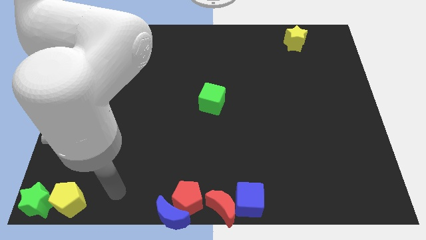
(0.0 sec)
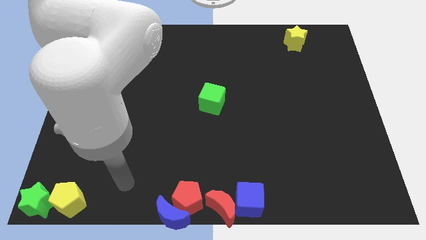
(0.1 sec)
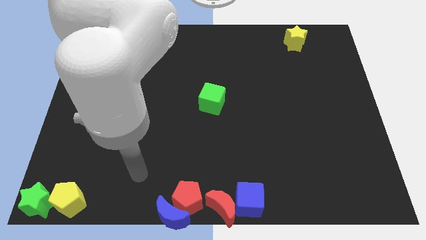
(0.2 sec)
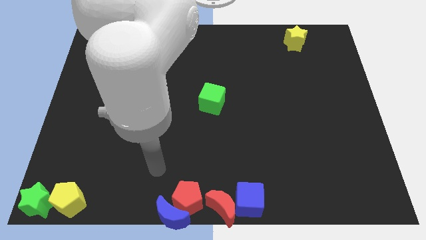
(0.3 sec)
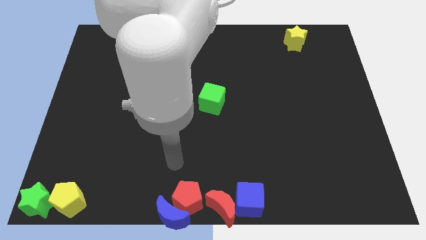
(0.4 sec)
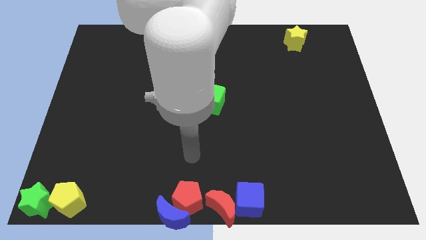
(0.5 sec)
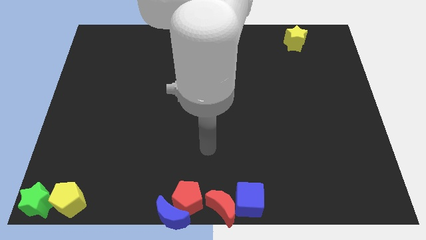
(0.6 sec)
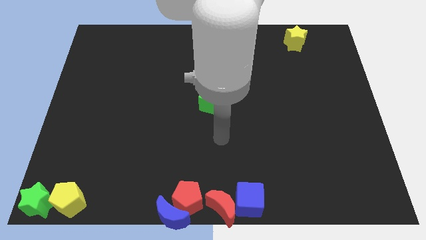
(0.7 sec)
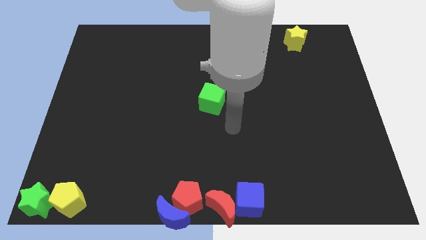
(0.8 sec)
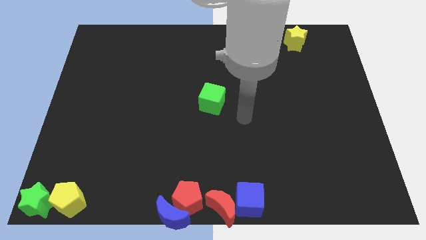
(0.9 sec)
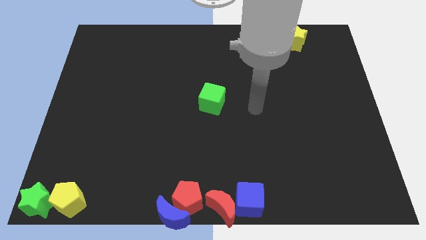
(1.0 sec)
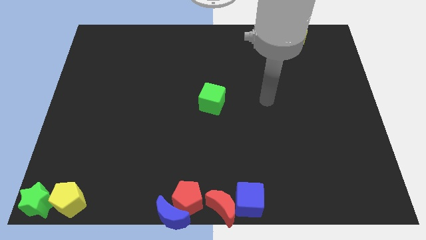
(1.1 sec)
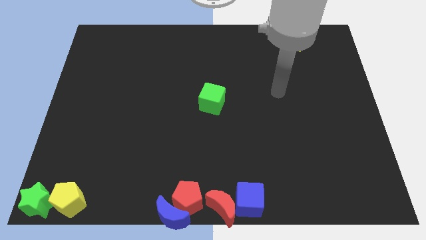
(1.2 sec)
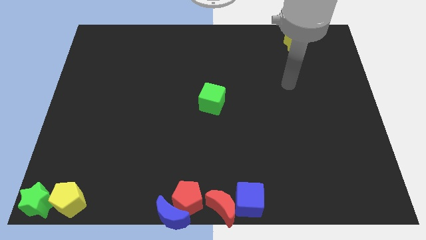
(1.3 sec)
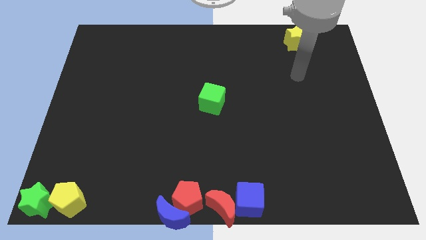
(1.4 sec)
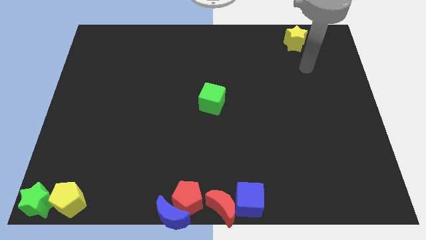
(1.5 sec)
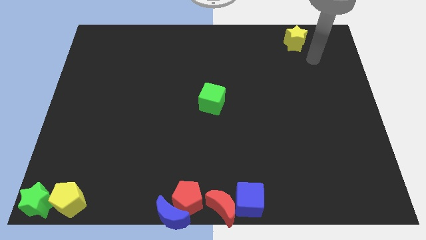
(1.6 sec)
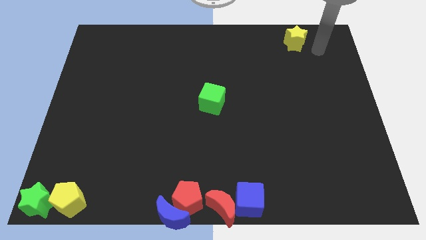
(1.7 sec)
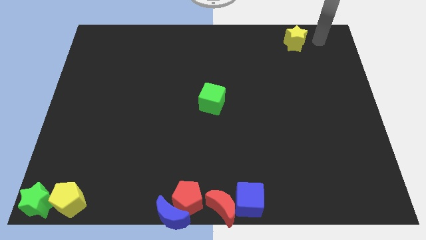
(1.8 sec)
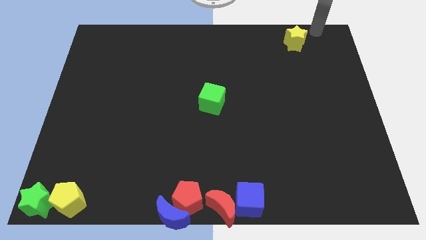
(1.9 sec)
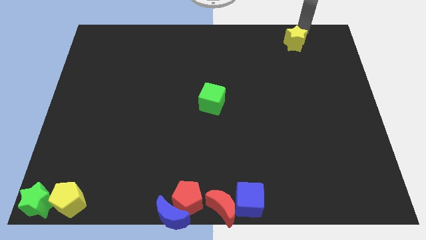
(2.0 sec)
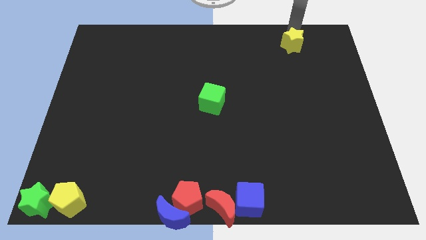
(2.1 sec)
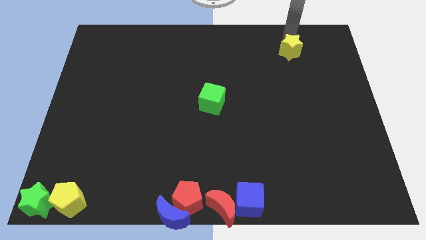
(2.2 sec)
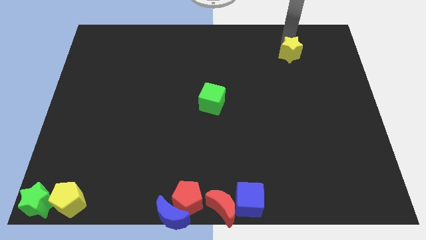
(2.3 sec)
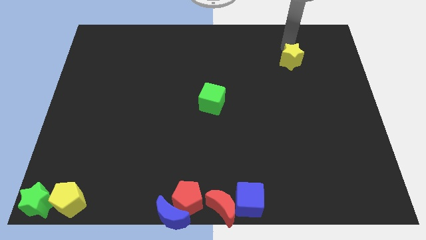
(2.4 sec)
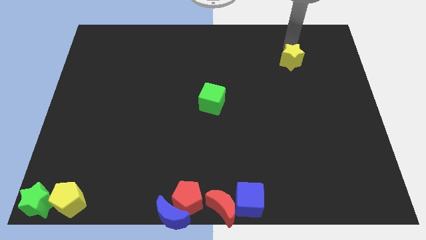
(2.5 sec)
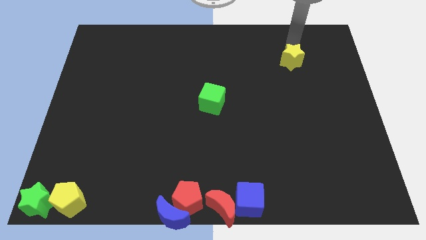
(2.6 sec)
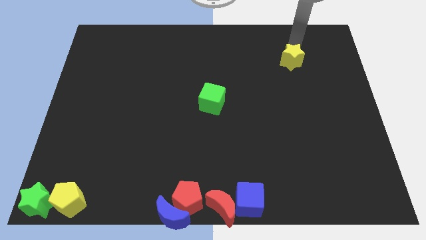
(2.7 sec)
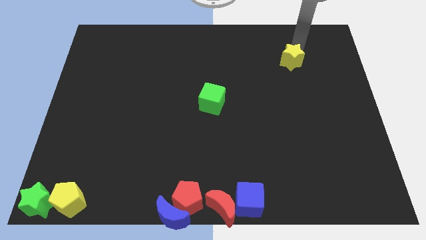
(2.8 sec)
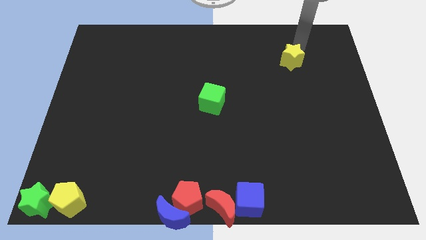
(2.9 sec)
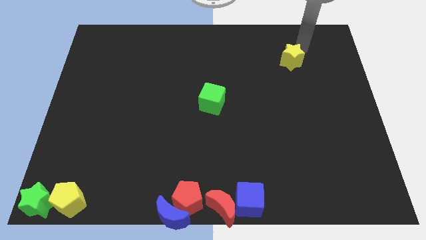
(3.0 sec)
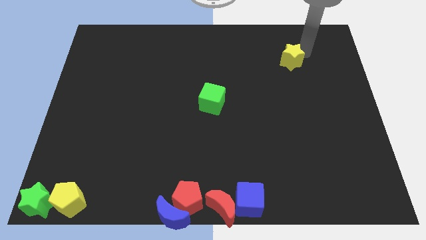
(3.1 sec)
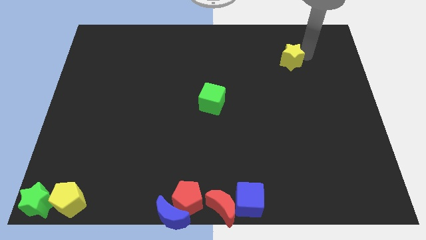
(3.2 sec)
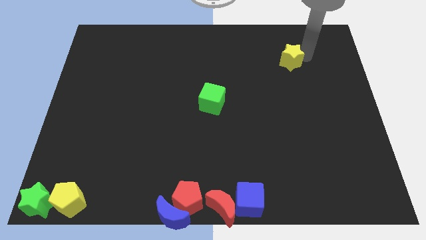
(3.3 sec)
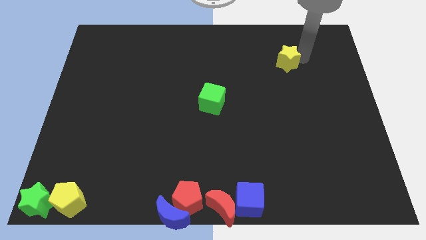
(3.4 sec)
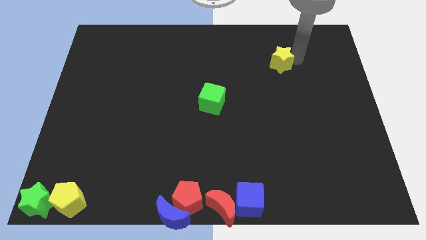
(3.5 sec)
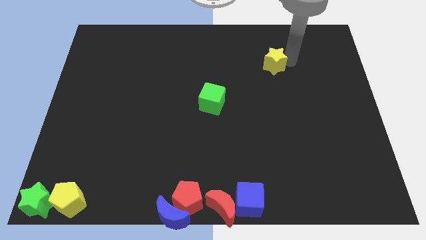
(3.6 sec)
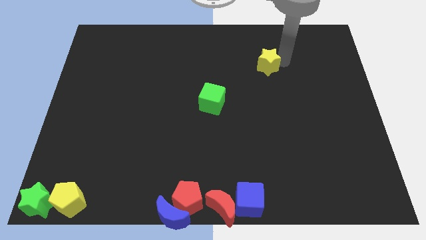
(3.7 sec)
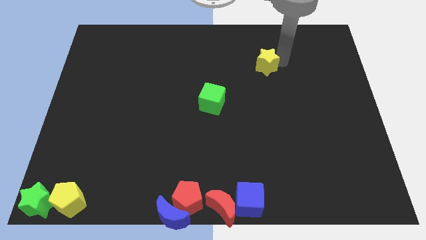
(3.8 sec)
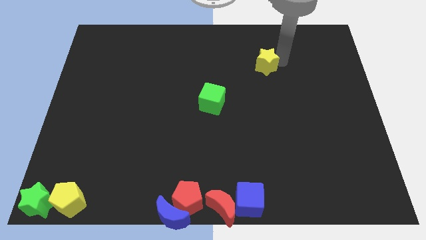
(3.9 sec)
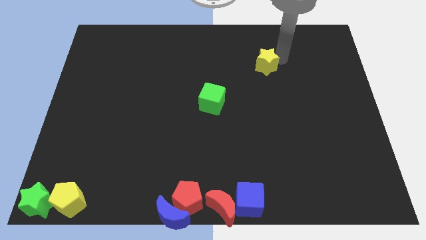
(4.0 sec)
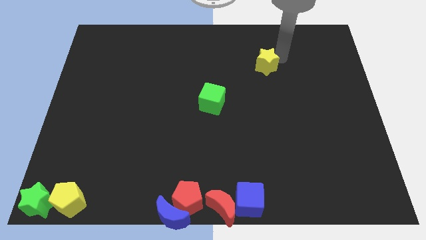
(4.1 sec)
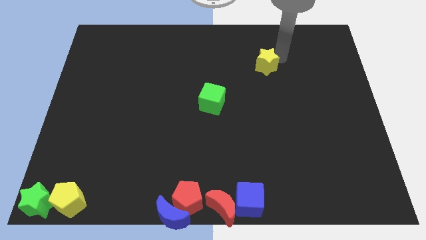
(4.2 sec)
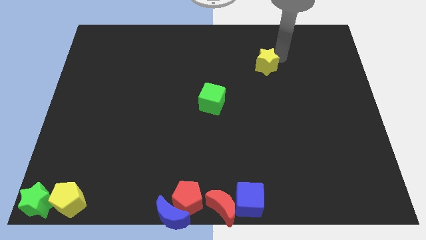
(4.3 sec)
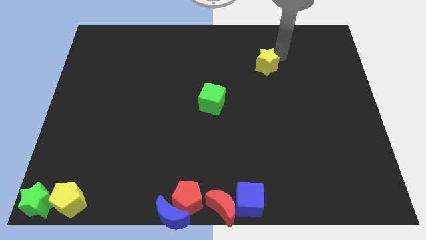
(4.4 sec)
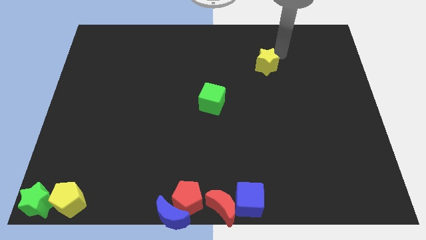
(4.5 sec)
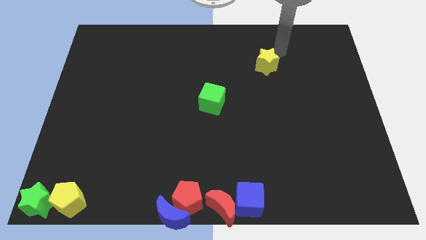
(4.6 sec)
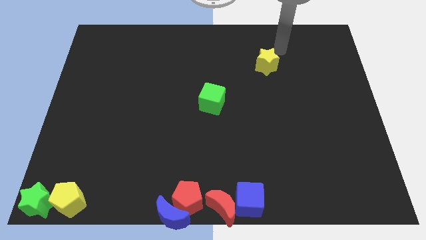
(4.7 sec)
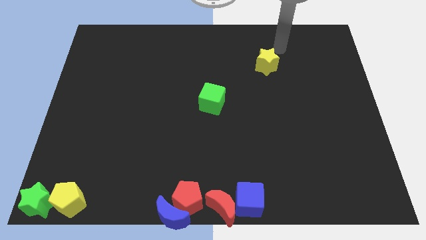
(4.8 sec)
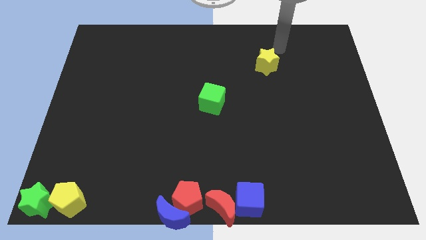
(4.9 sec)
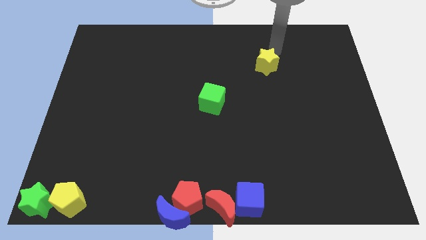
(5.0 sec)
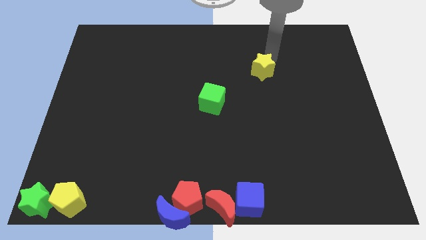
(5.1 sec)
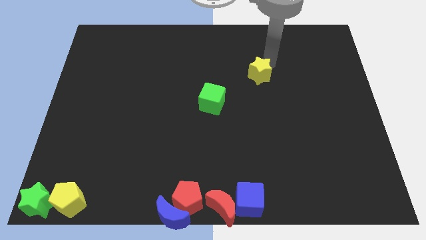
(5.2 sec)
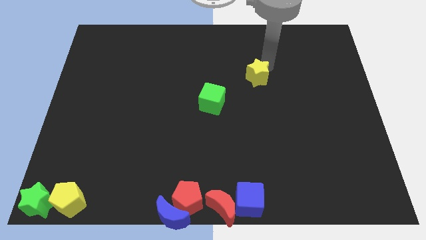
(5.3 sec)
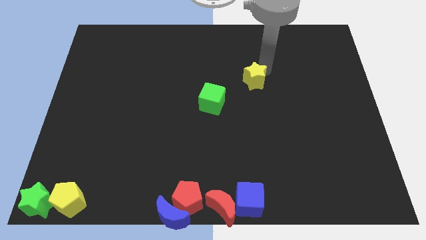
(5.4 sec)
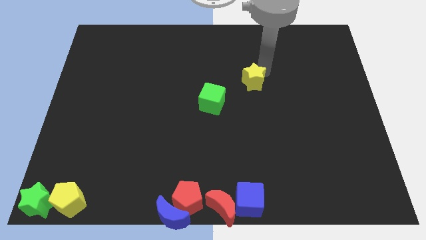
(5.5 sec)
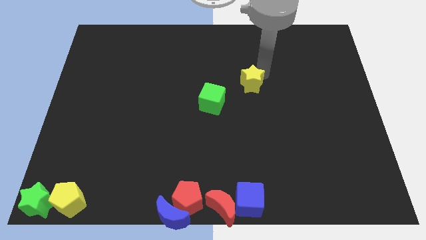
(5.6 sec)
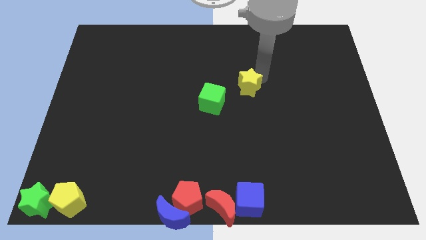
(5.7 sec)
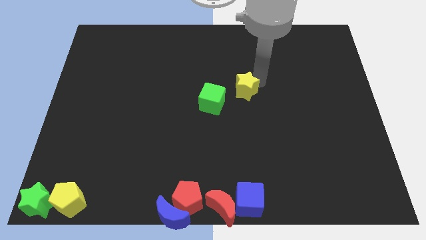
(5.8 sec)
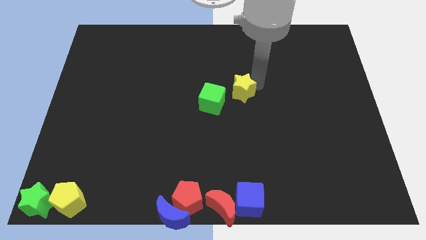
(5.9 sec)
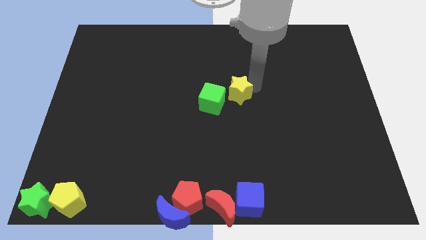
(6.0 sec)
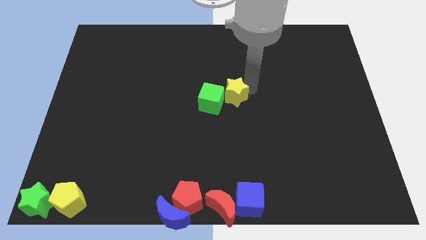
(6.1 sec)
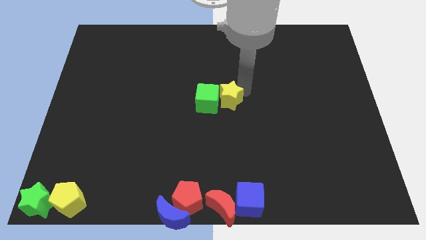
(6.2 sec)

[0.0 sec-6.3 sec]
drag teh yellow star into the right side of the green cube

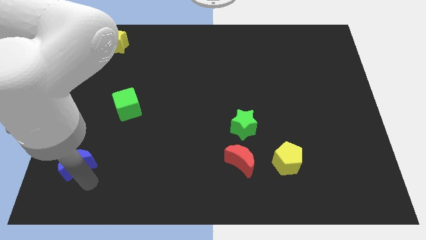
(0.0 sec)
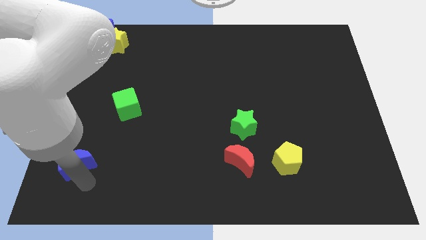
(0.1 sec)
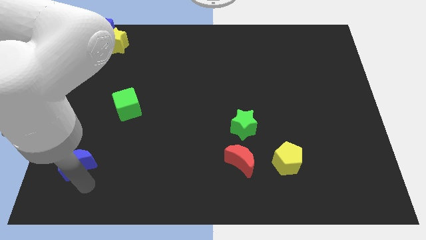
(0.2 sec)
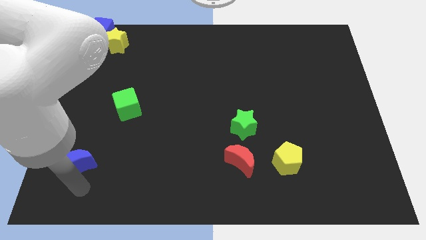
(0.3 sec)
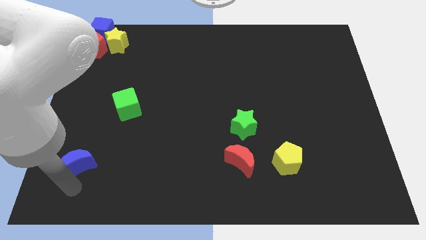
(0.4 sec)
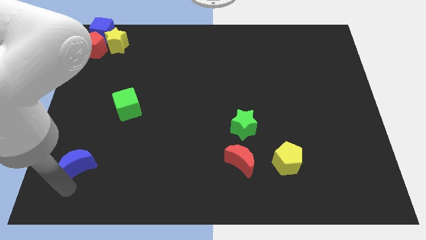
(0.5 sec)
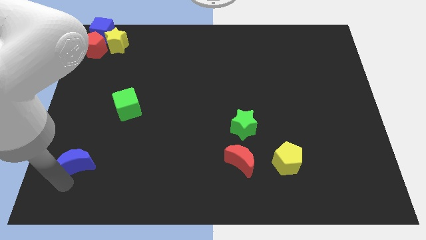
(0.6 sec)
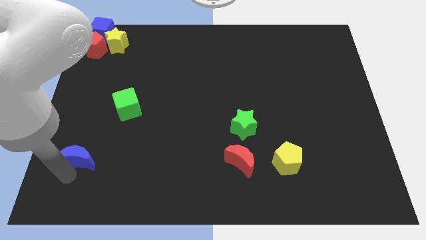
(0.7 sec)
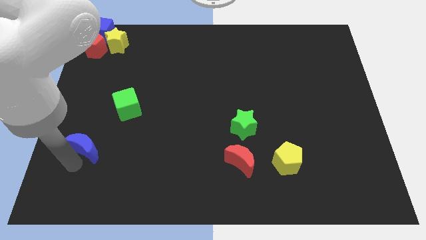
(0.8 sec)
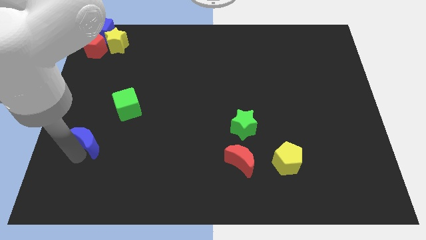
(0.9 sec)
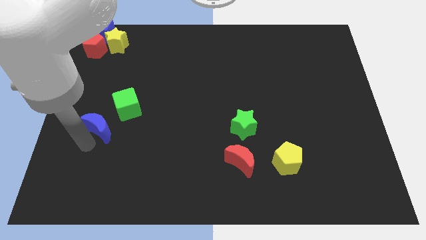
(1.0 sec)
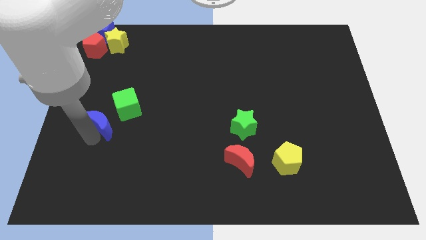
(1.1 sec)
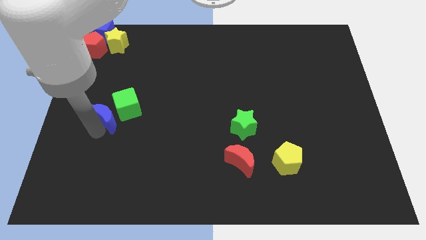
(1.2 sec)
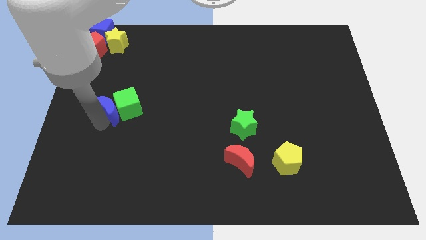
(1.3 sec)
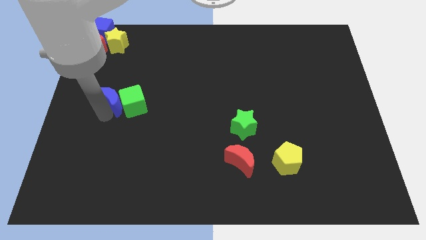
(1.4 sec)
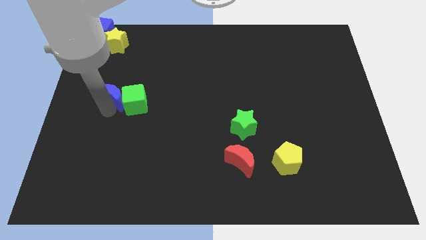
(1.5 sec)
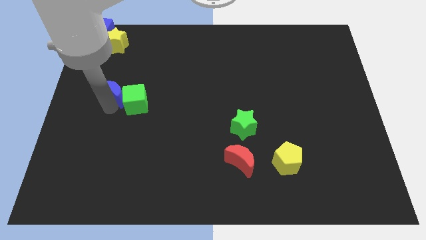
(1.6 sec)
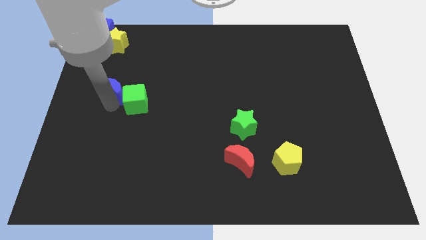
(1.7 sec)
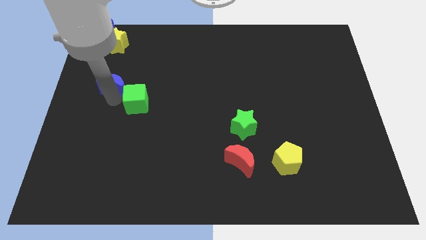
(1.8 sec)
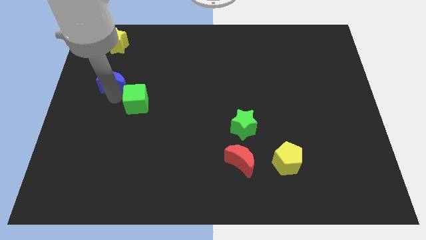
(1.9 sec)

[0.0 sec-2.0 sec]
put the blue crescent at the top left of the green cube

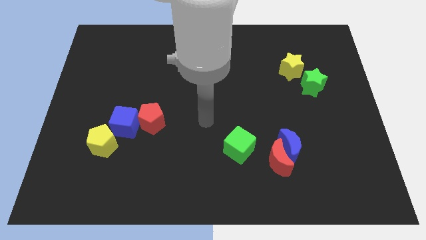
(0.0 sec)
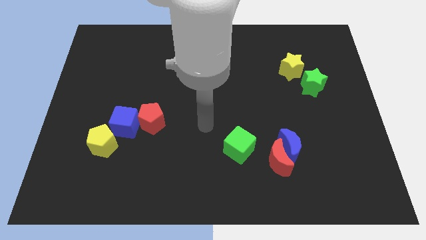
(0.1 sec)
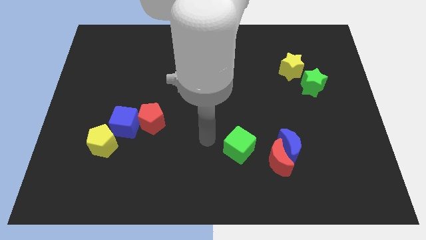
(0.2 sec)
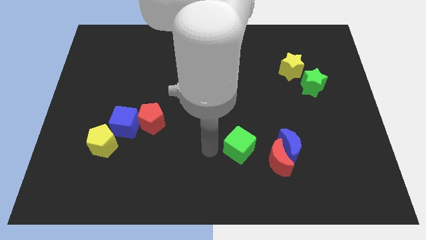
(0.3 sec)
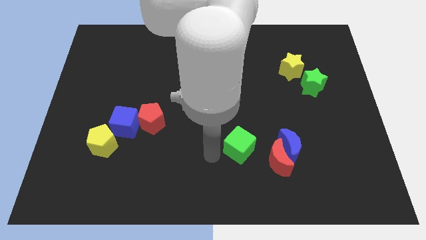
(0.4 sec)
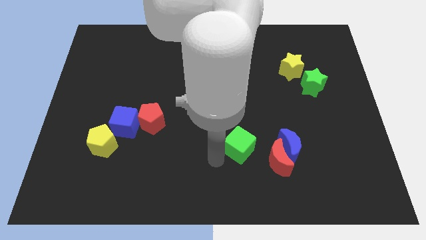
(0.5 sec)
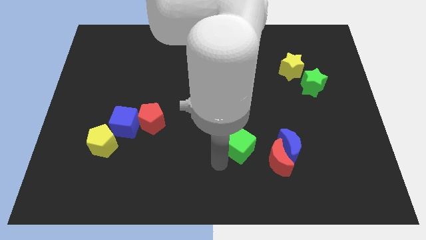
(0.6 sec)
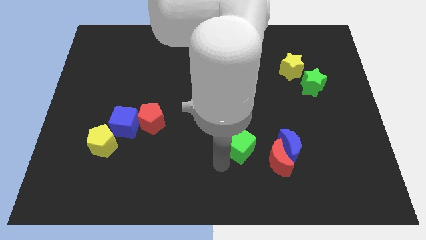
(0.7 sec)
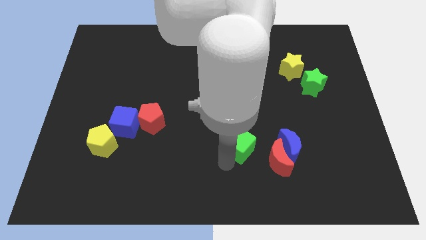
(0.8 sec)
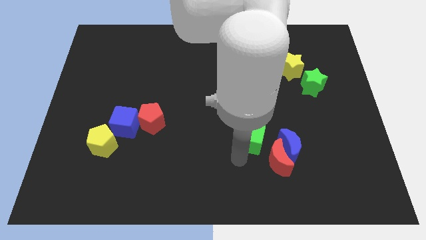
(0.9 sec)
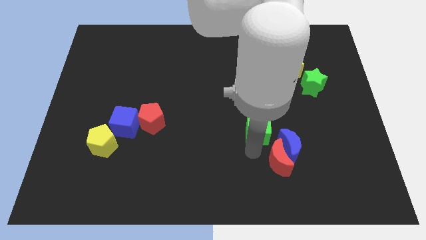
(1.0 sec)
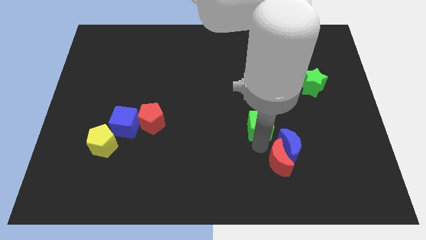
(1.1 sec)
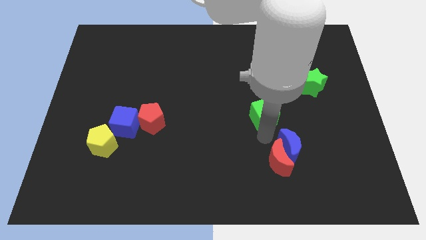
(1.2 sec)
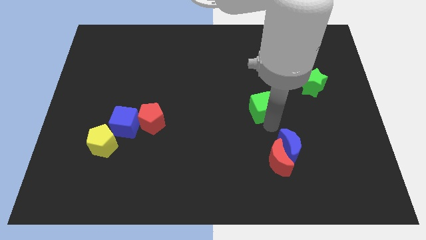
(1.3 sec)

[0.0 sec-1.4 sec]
push the green cube to the top side of the group of red and blue moons
